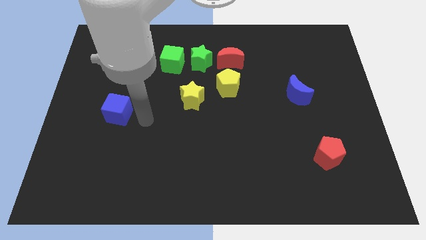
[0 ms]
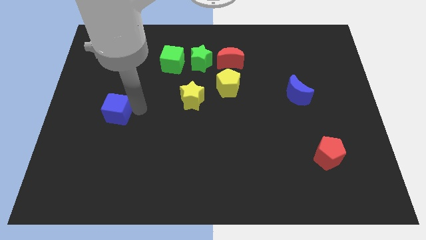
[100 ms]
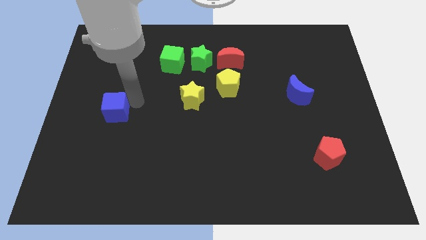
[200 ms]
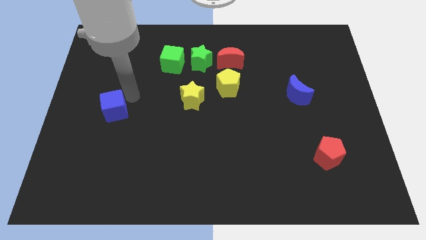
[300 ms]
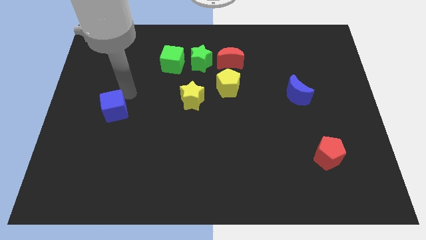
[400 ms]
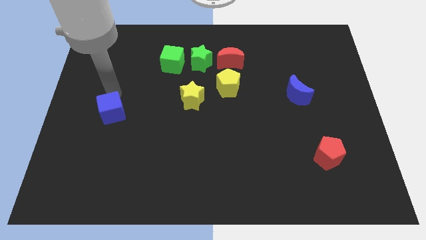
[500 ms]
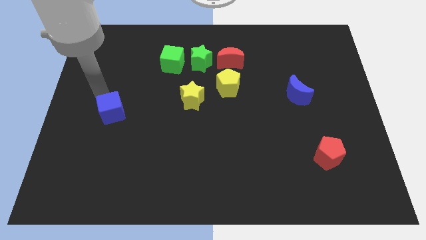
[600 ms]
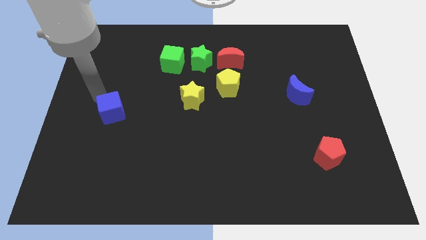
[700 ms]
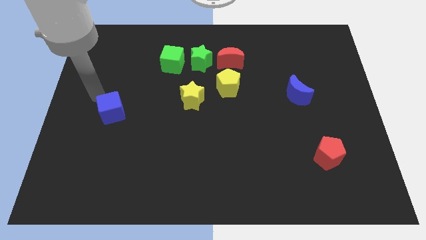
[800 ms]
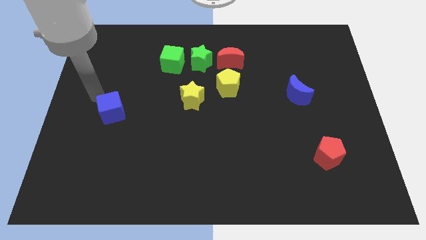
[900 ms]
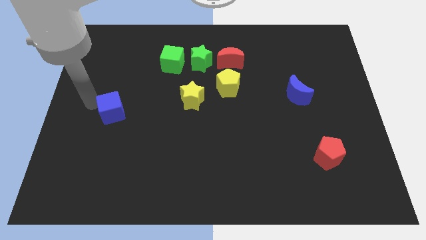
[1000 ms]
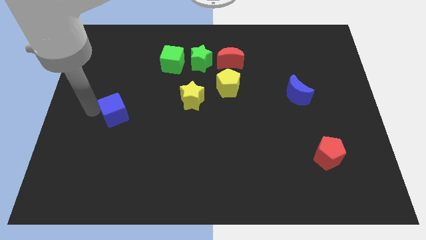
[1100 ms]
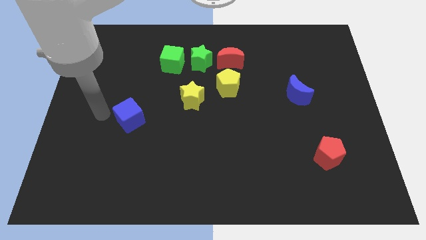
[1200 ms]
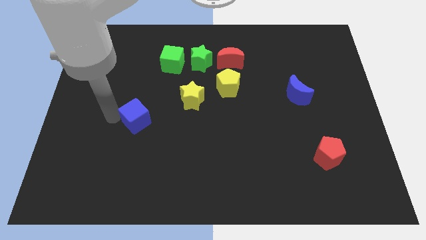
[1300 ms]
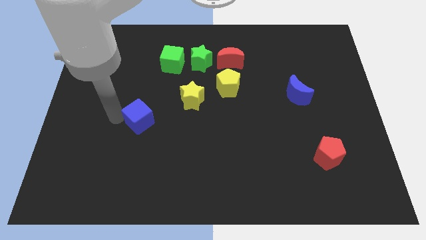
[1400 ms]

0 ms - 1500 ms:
push the blue cube to the left of the blue crescent

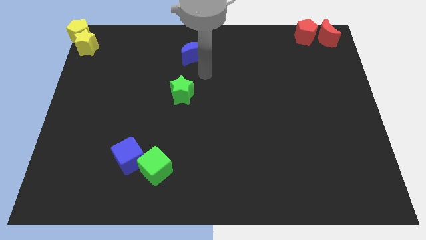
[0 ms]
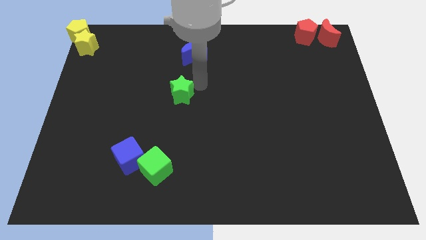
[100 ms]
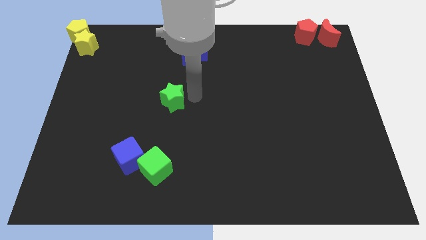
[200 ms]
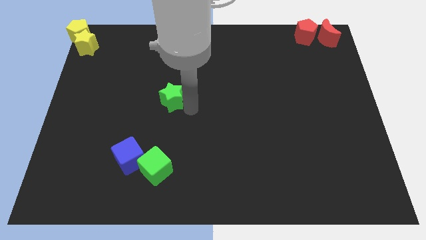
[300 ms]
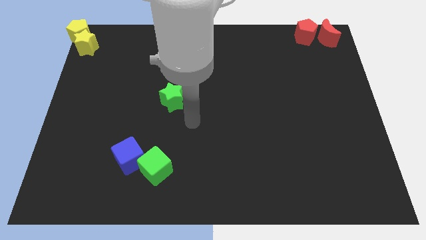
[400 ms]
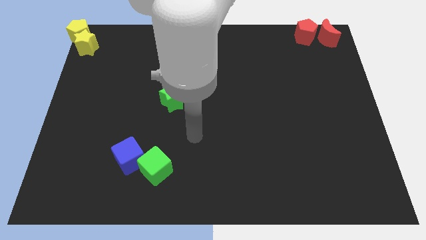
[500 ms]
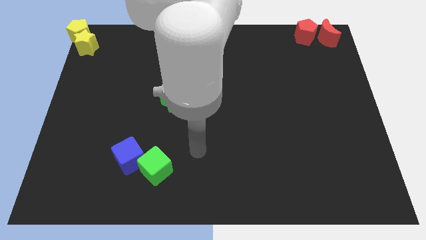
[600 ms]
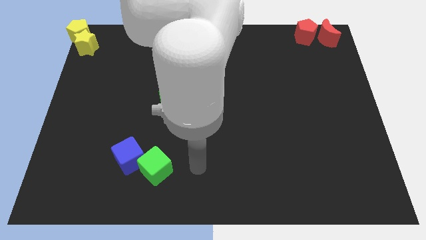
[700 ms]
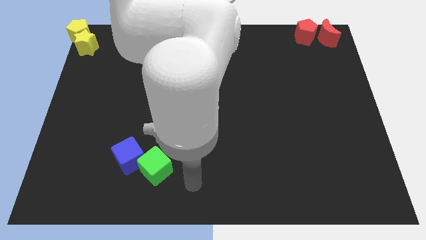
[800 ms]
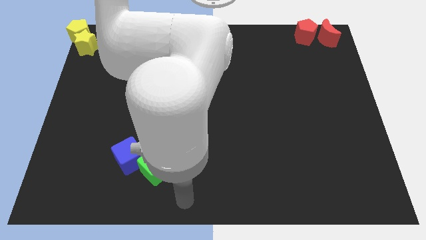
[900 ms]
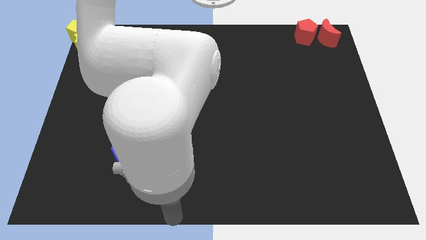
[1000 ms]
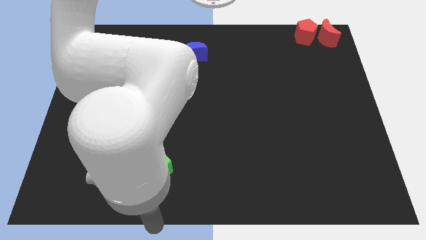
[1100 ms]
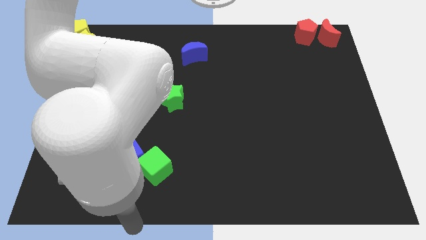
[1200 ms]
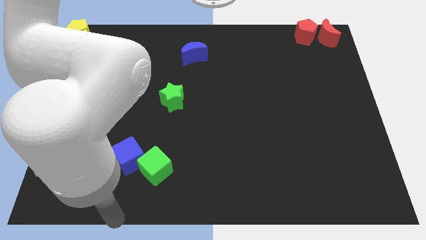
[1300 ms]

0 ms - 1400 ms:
while touch the green star down your hand to the bottom center

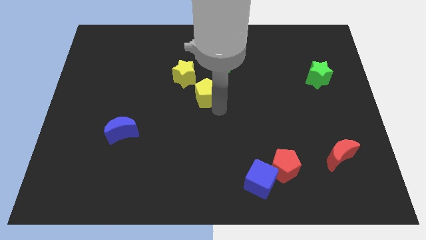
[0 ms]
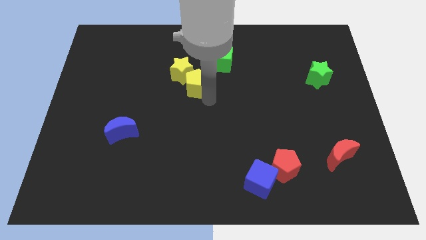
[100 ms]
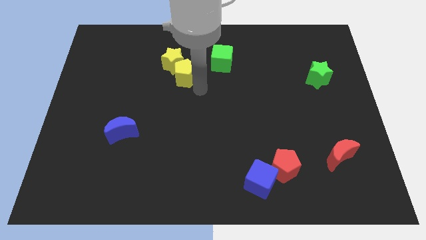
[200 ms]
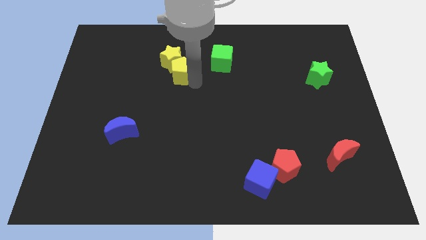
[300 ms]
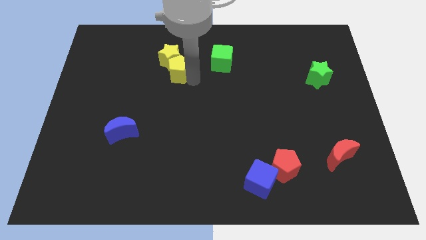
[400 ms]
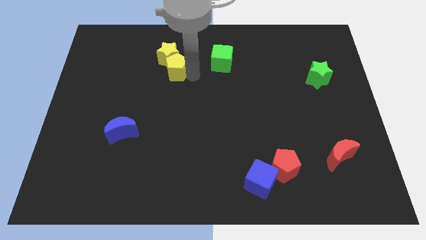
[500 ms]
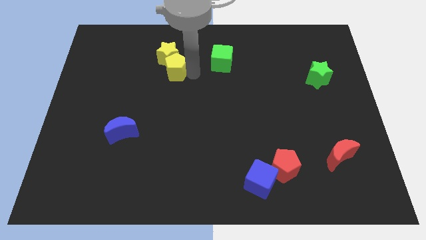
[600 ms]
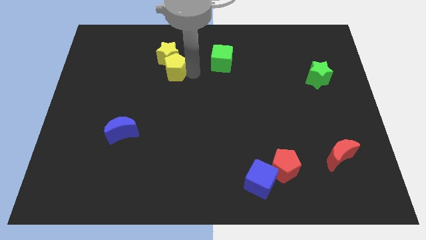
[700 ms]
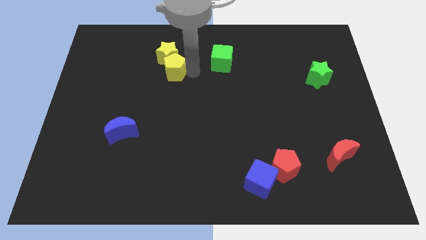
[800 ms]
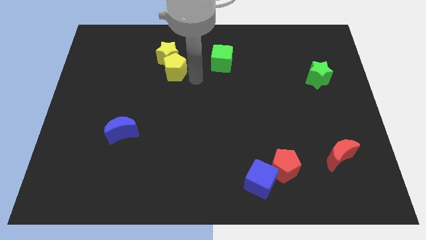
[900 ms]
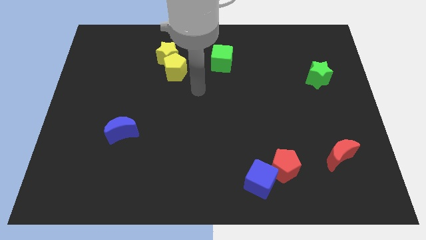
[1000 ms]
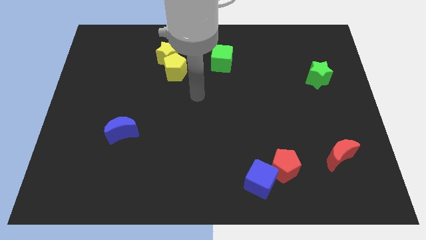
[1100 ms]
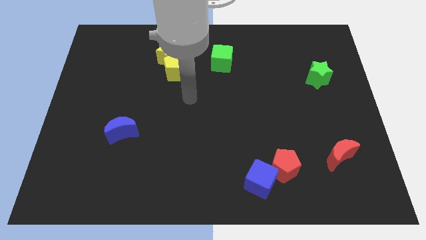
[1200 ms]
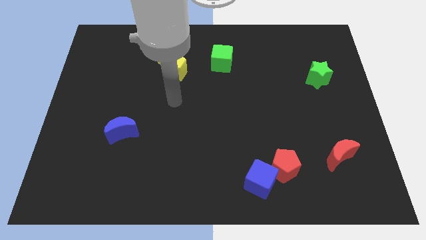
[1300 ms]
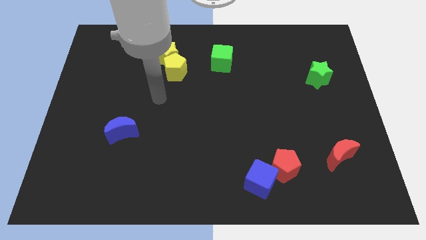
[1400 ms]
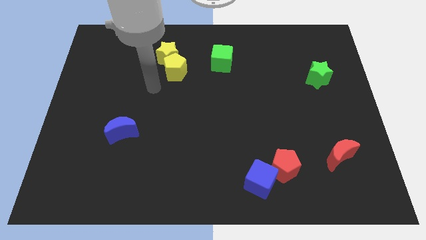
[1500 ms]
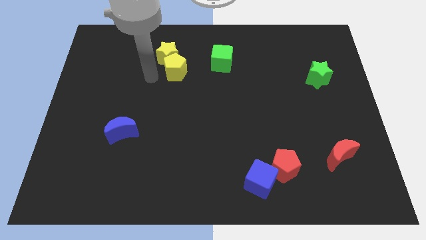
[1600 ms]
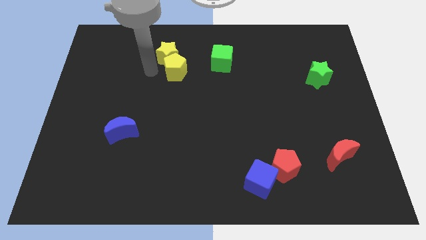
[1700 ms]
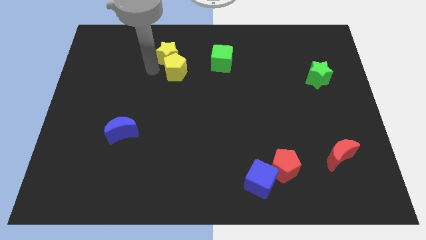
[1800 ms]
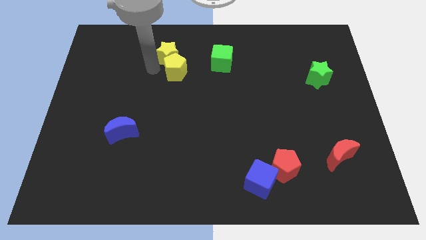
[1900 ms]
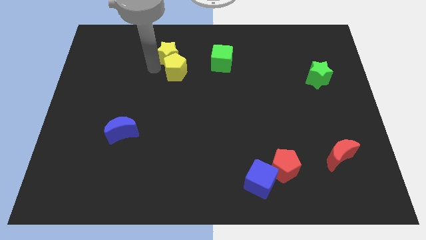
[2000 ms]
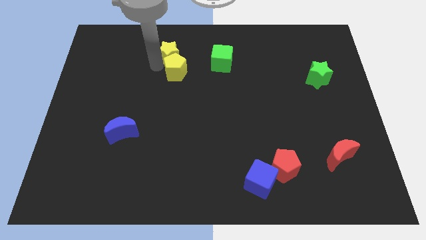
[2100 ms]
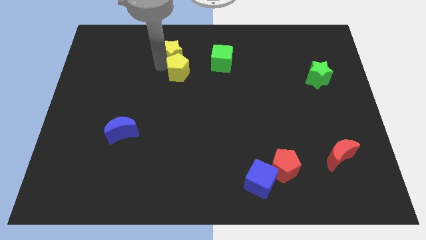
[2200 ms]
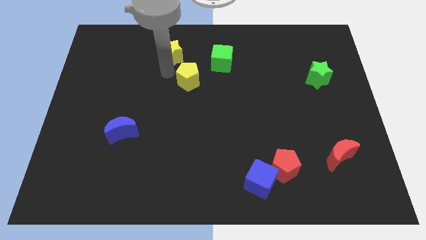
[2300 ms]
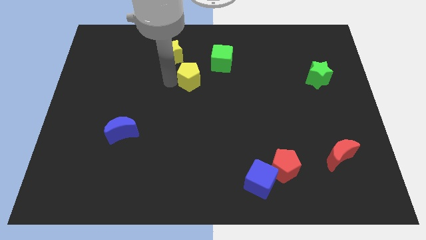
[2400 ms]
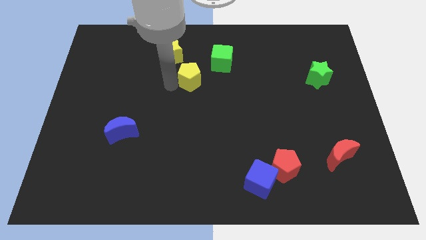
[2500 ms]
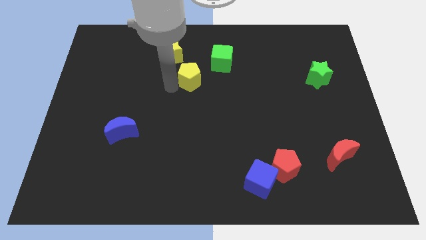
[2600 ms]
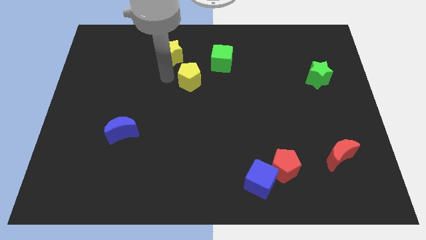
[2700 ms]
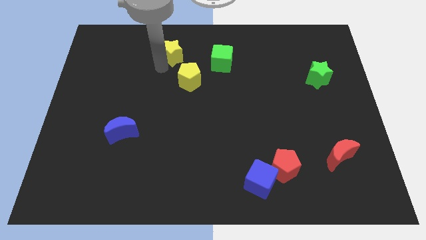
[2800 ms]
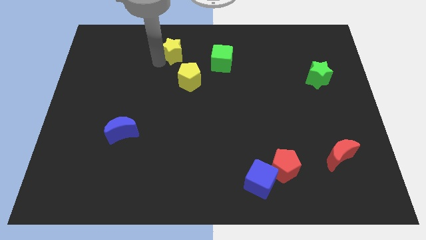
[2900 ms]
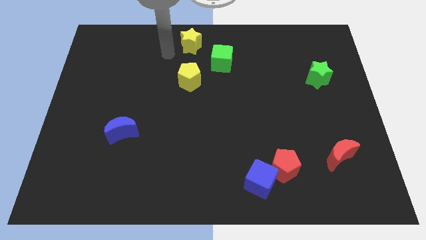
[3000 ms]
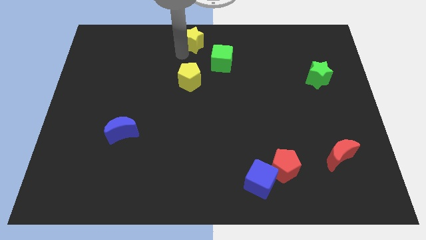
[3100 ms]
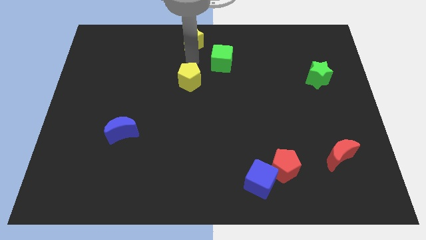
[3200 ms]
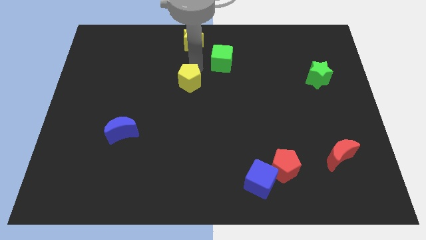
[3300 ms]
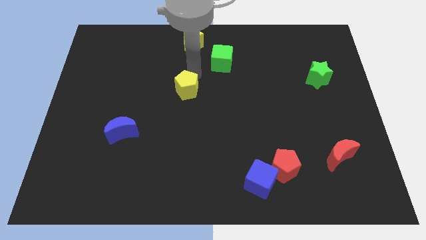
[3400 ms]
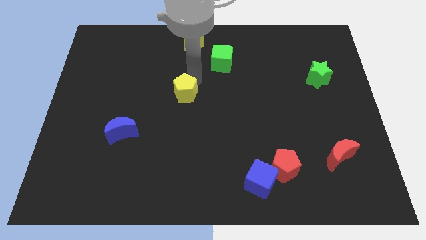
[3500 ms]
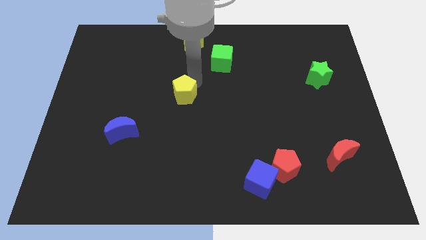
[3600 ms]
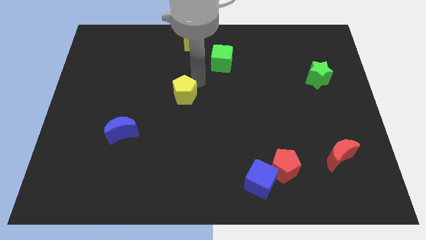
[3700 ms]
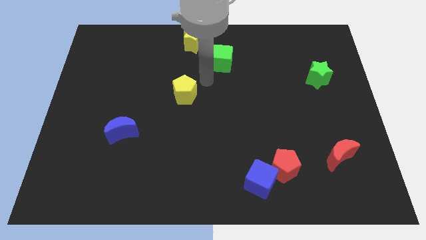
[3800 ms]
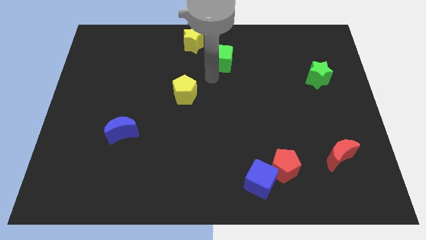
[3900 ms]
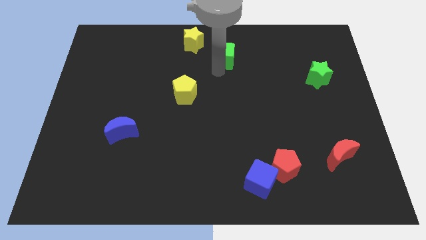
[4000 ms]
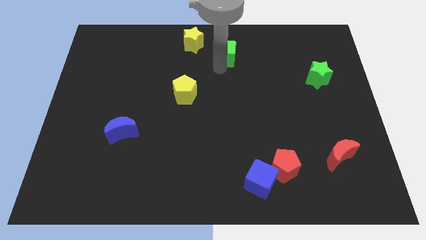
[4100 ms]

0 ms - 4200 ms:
move the yellow star diagonally to the green cube

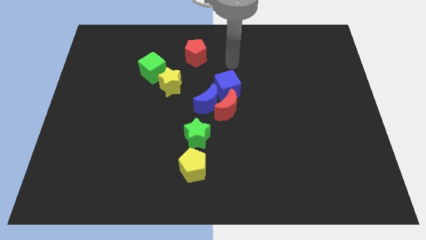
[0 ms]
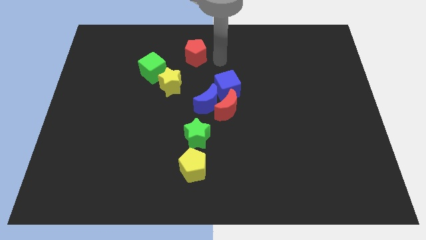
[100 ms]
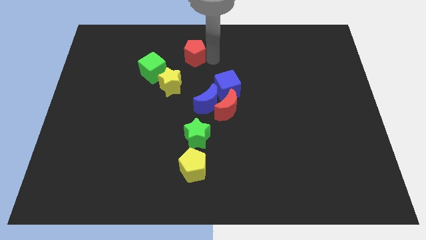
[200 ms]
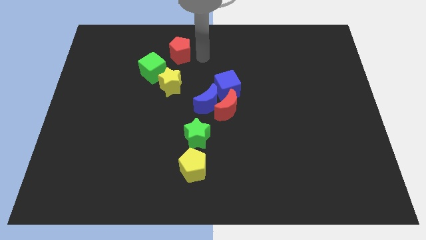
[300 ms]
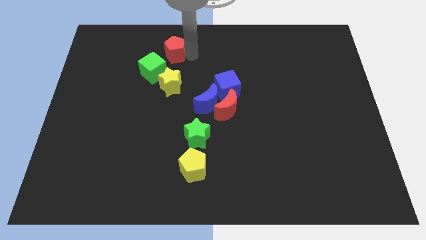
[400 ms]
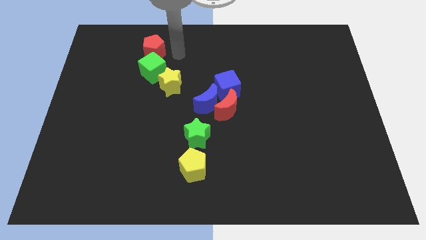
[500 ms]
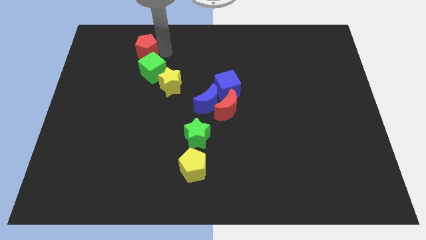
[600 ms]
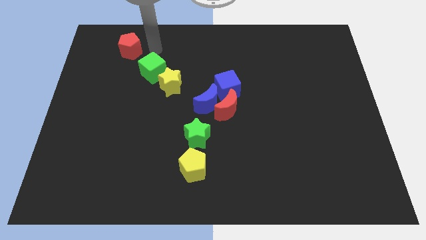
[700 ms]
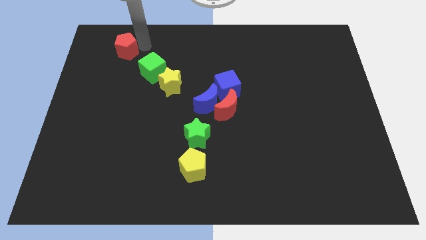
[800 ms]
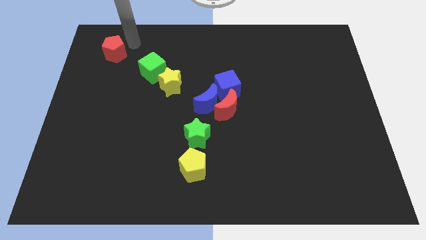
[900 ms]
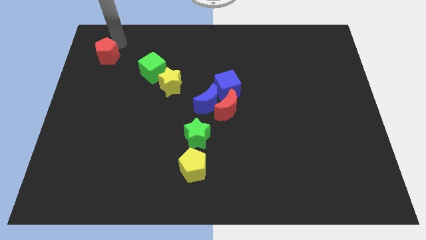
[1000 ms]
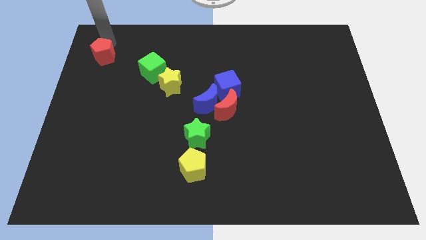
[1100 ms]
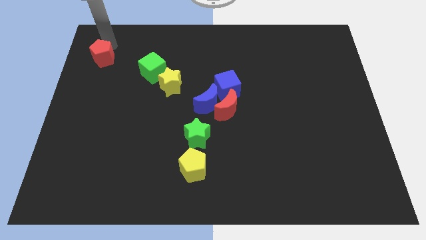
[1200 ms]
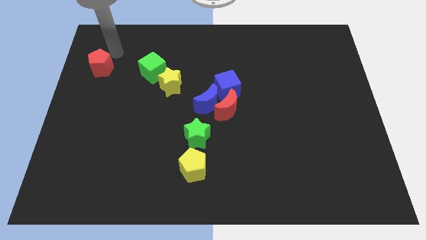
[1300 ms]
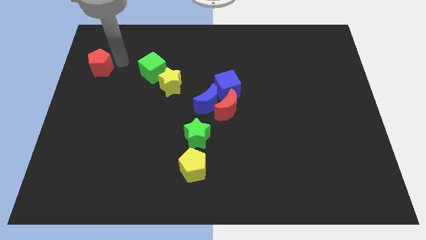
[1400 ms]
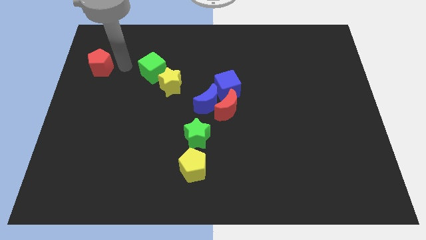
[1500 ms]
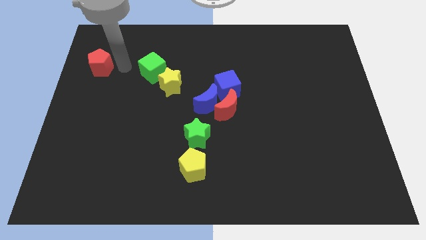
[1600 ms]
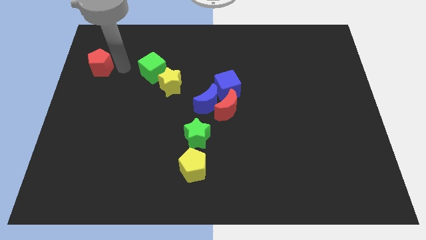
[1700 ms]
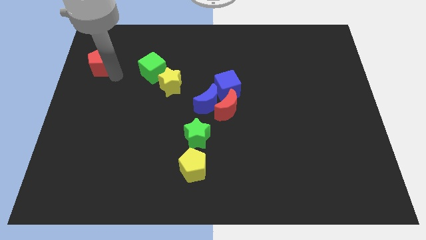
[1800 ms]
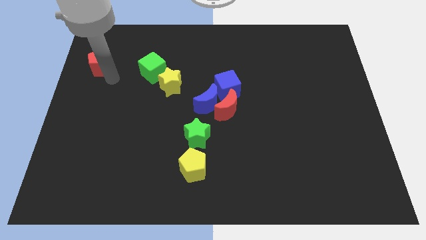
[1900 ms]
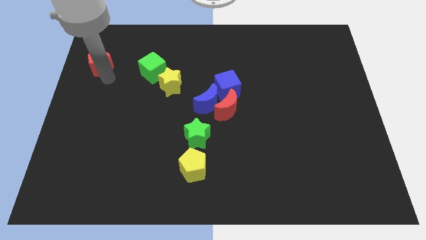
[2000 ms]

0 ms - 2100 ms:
push the red pentagon towards the left side of the board
